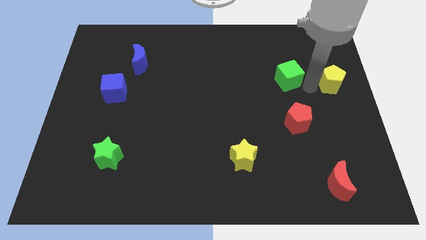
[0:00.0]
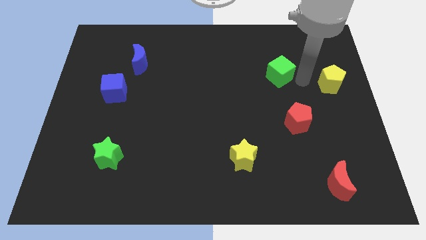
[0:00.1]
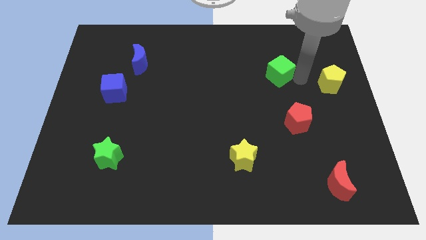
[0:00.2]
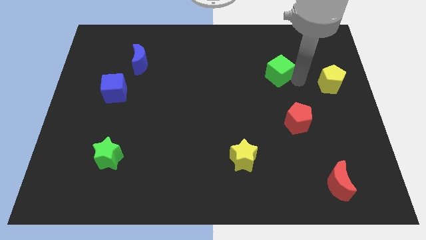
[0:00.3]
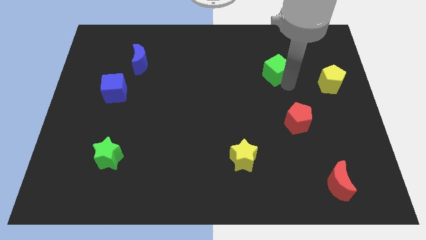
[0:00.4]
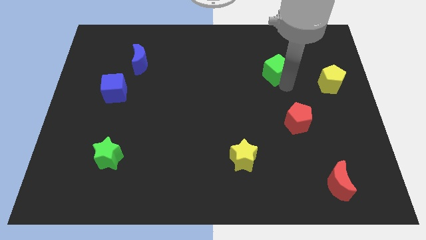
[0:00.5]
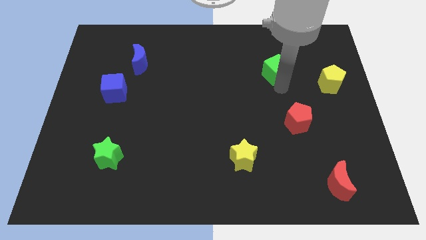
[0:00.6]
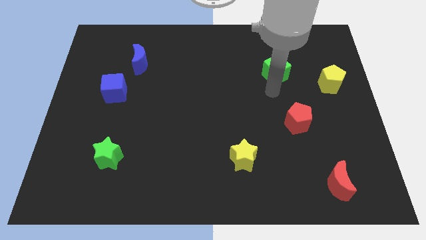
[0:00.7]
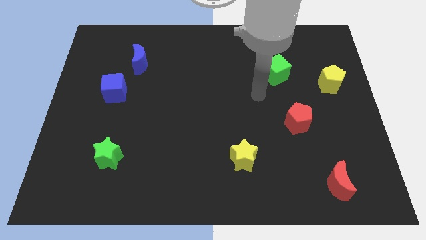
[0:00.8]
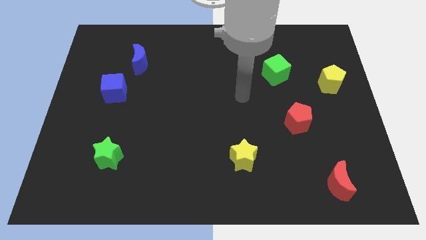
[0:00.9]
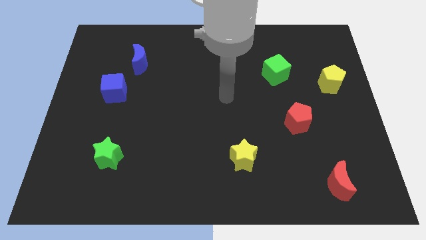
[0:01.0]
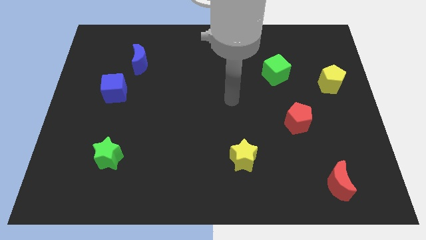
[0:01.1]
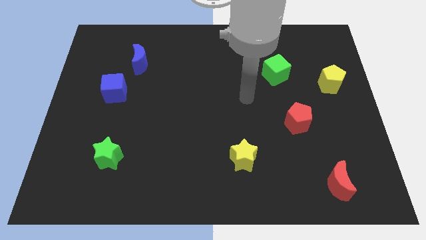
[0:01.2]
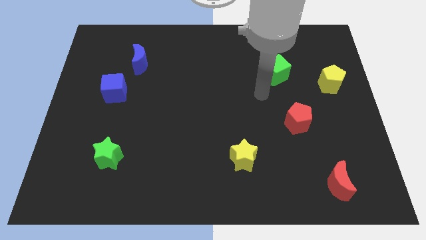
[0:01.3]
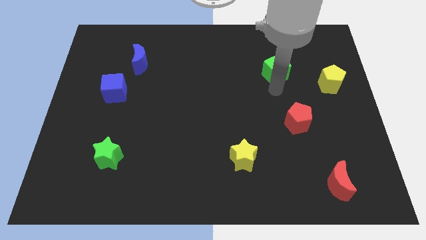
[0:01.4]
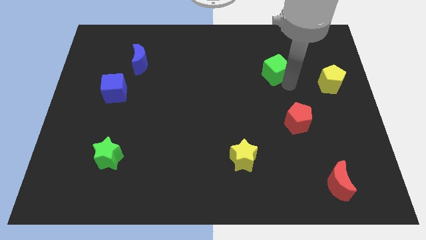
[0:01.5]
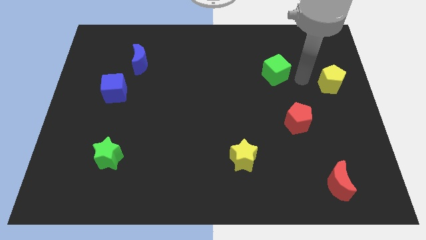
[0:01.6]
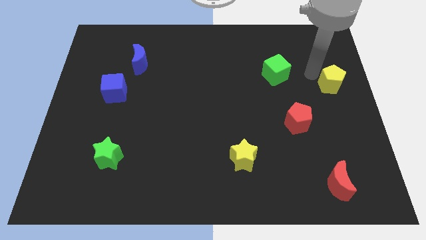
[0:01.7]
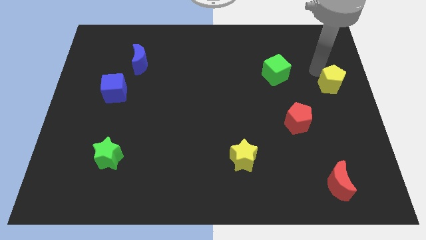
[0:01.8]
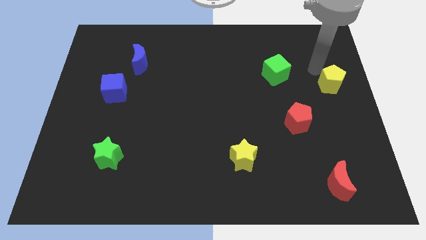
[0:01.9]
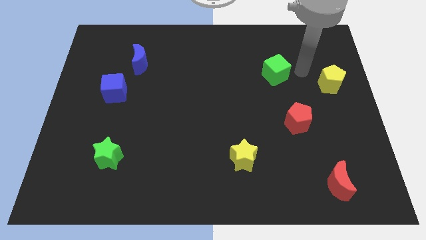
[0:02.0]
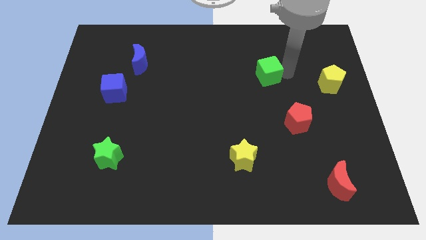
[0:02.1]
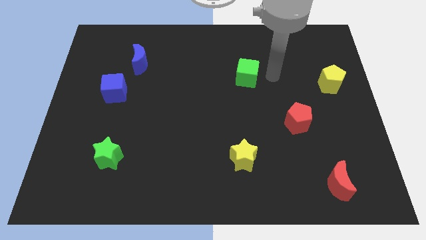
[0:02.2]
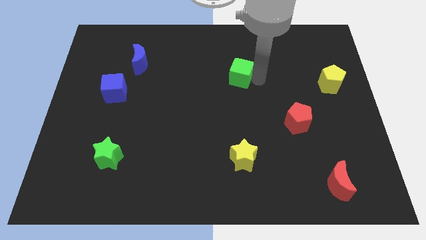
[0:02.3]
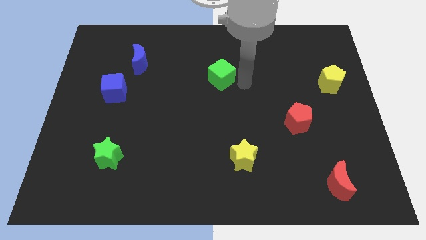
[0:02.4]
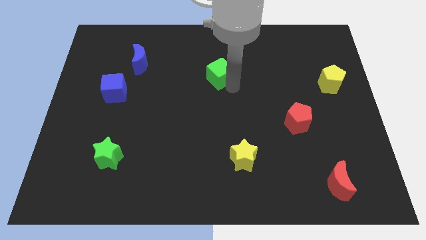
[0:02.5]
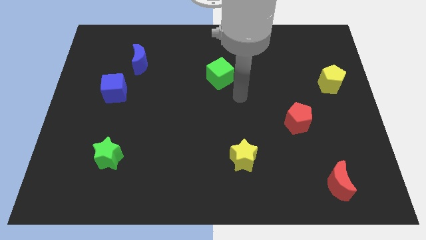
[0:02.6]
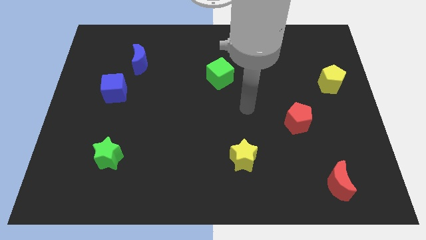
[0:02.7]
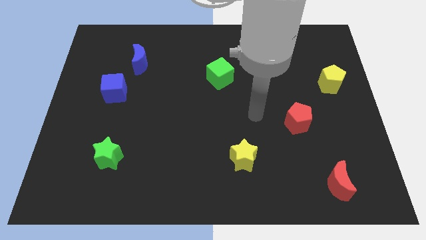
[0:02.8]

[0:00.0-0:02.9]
put the green cube diagonal to the green star

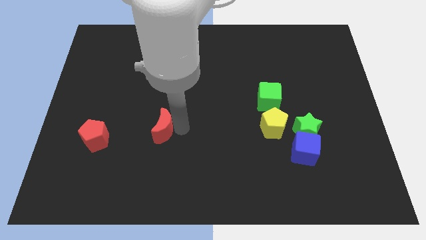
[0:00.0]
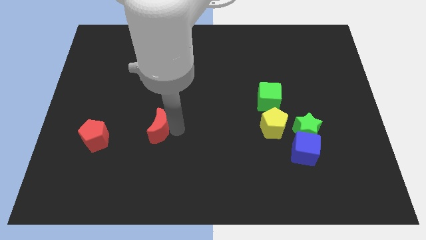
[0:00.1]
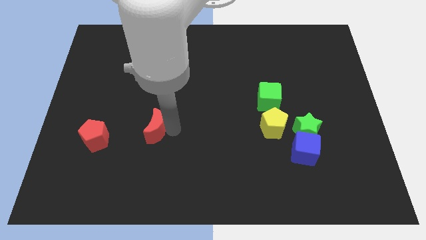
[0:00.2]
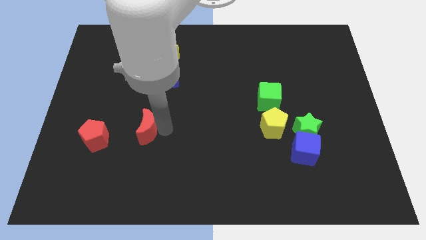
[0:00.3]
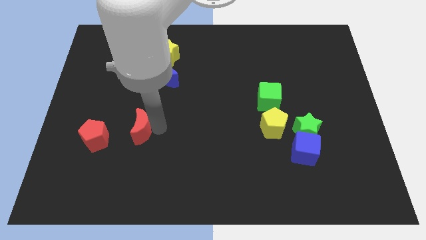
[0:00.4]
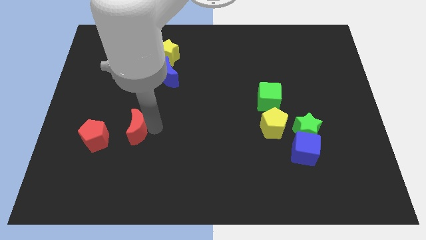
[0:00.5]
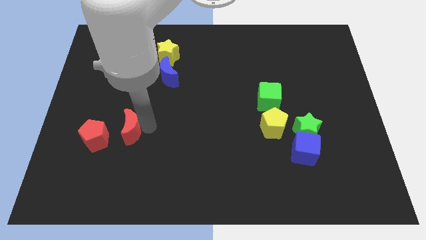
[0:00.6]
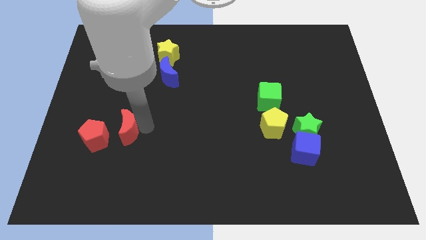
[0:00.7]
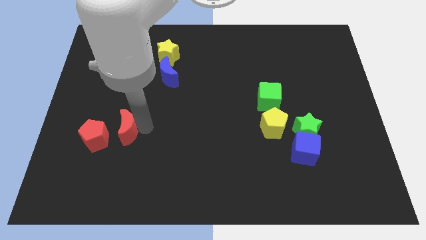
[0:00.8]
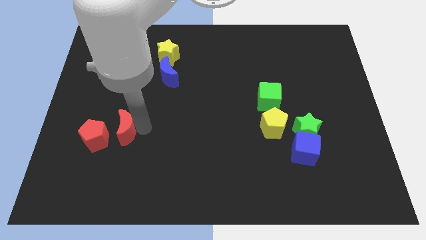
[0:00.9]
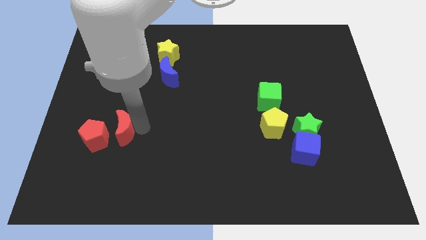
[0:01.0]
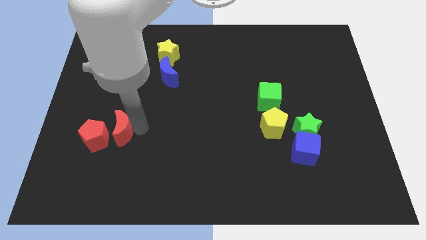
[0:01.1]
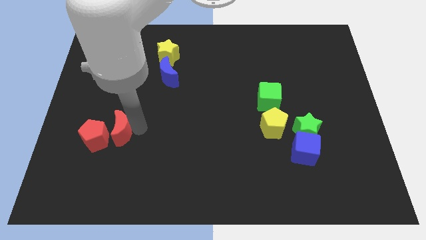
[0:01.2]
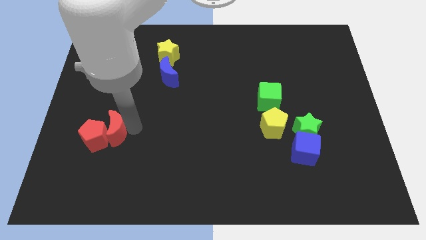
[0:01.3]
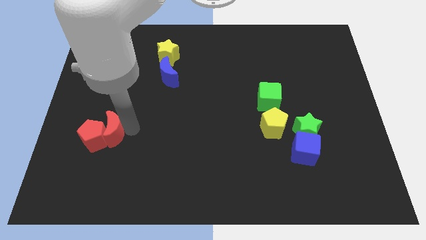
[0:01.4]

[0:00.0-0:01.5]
push the red crescent into the red pentagon

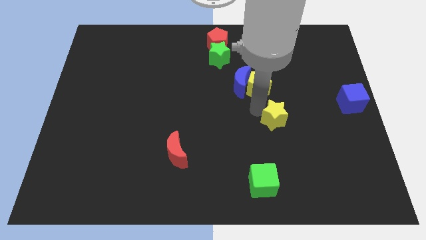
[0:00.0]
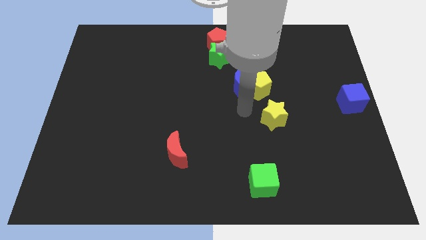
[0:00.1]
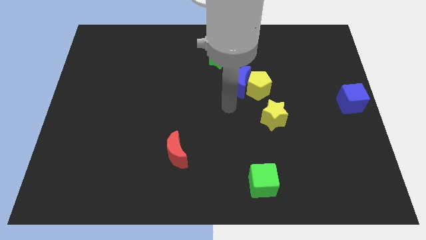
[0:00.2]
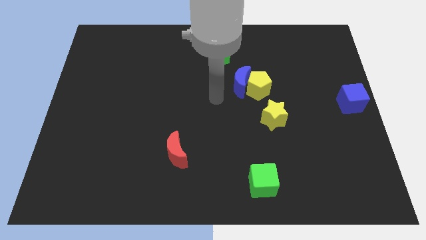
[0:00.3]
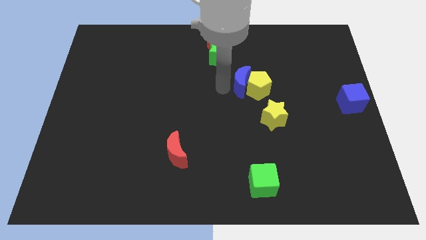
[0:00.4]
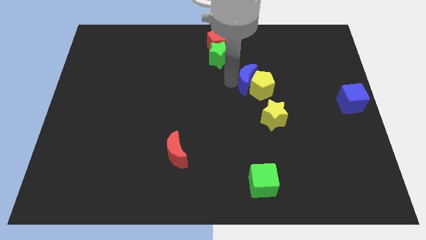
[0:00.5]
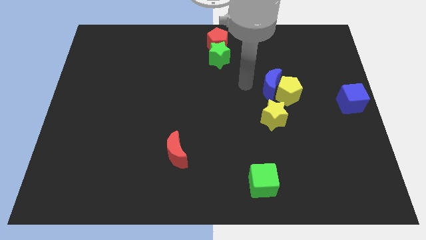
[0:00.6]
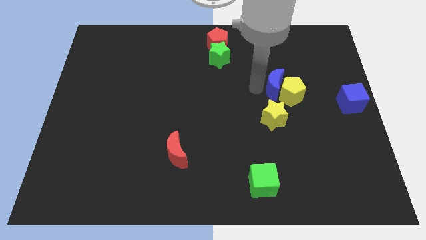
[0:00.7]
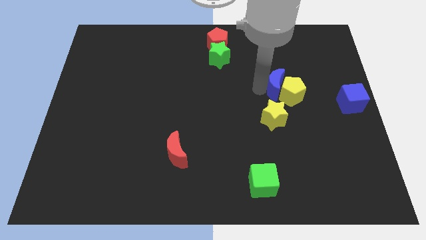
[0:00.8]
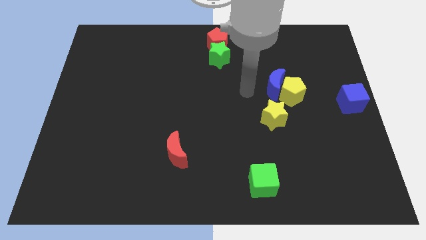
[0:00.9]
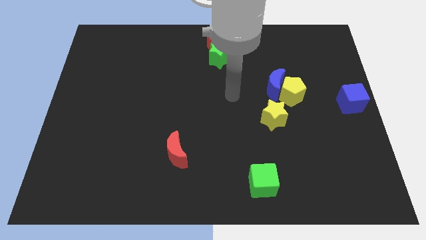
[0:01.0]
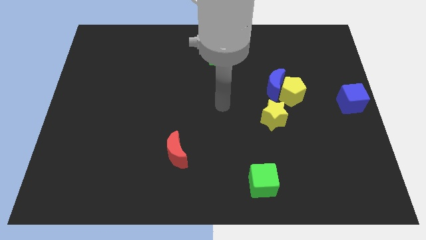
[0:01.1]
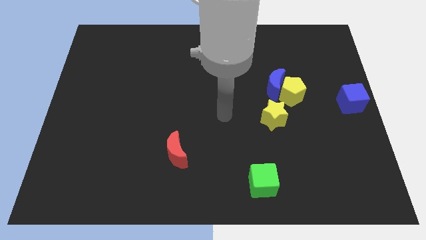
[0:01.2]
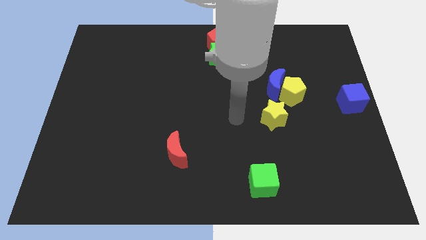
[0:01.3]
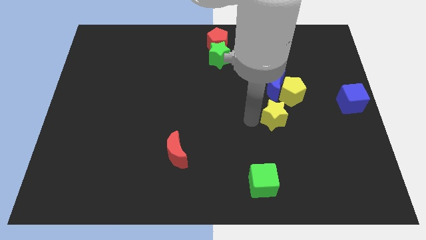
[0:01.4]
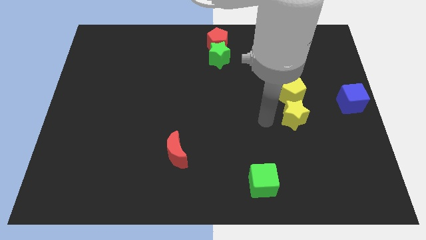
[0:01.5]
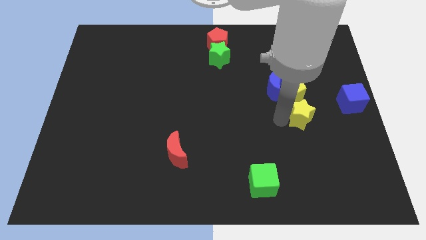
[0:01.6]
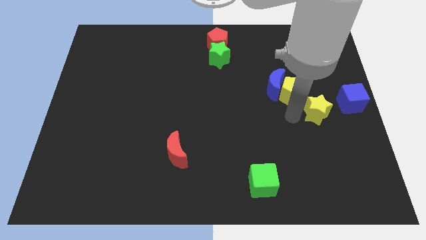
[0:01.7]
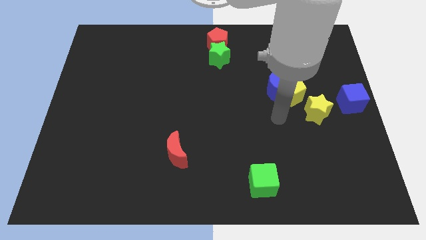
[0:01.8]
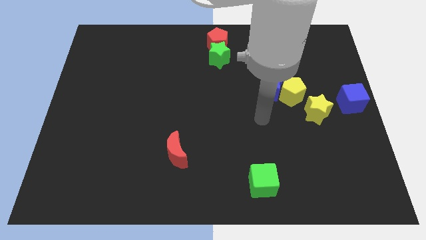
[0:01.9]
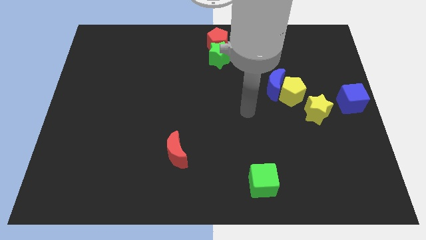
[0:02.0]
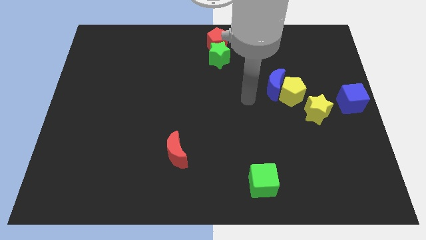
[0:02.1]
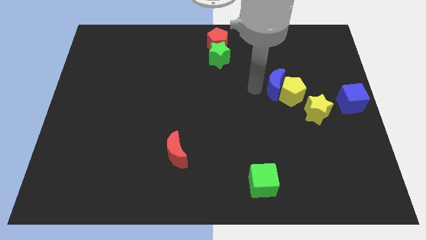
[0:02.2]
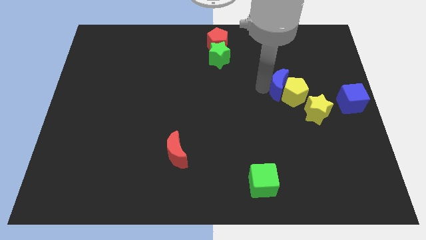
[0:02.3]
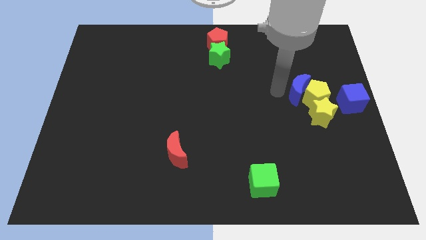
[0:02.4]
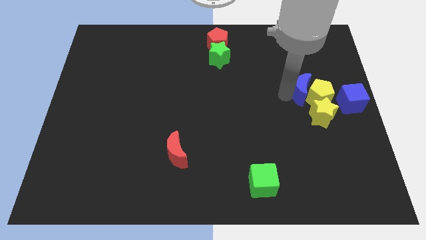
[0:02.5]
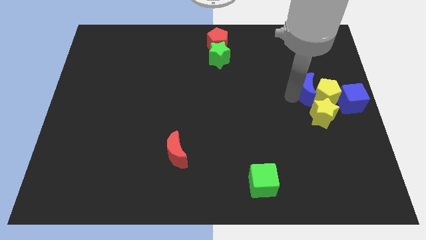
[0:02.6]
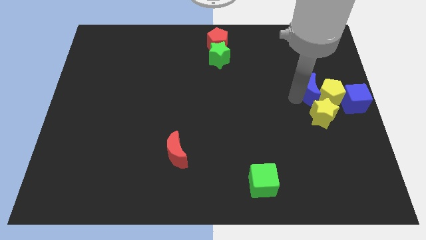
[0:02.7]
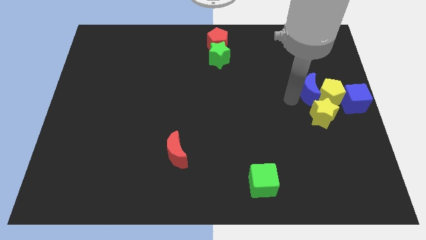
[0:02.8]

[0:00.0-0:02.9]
move yellow pentagon and star towards blue cube

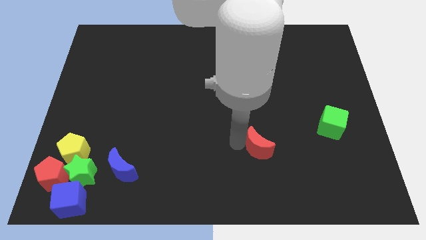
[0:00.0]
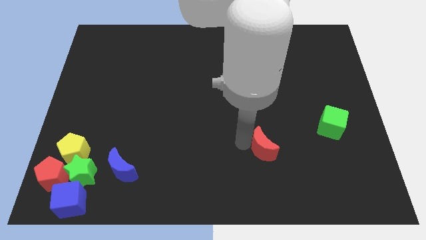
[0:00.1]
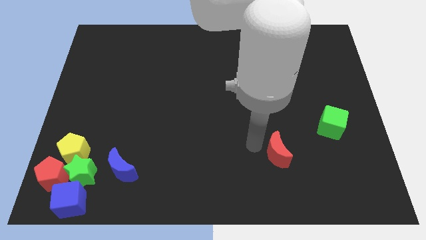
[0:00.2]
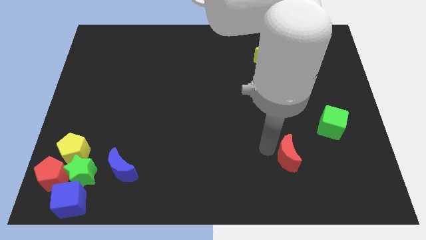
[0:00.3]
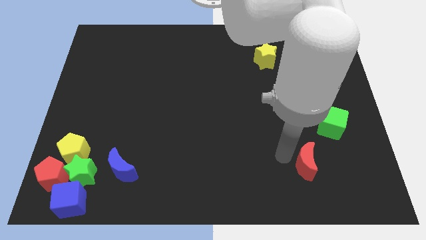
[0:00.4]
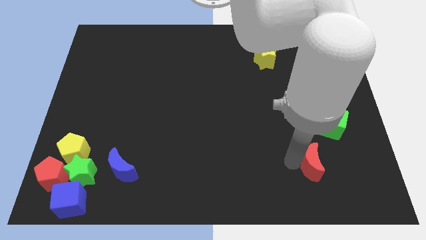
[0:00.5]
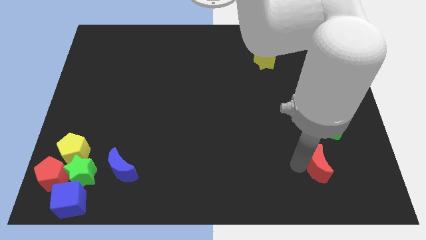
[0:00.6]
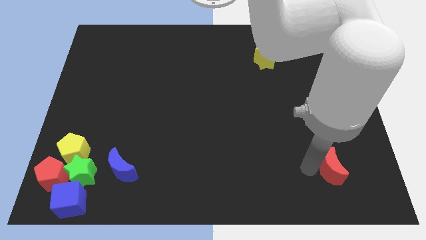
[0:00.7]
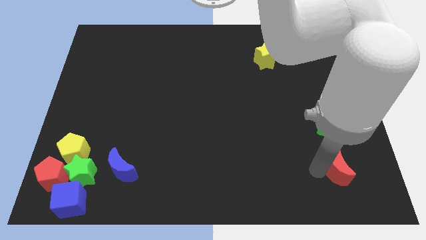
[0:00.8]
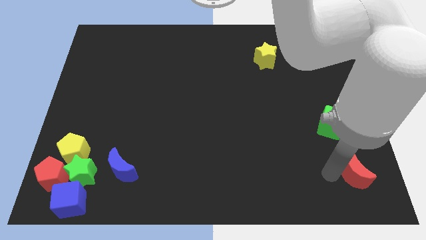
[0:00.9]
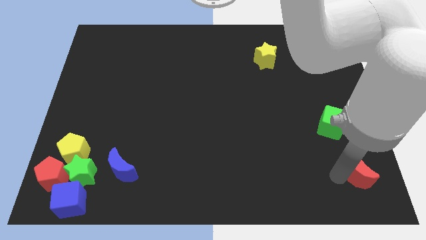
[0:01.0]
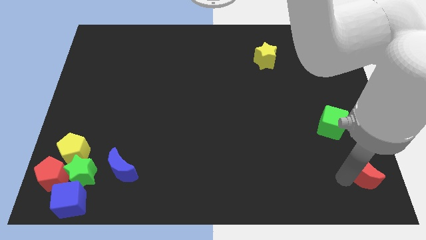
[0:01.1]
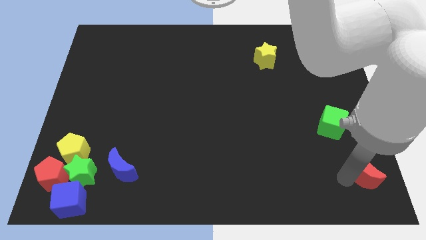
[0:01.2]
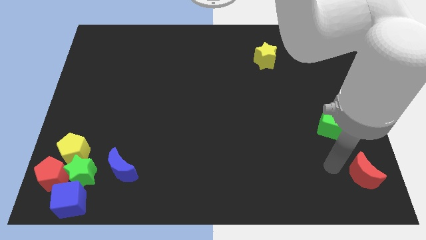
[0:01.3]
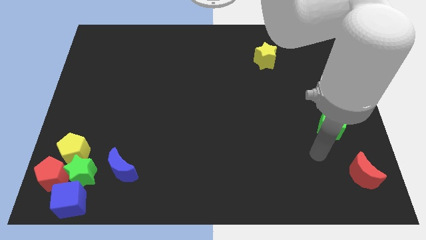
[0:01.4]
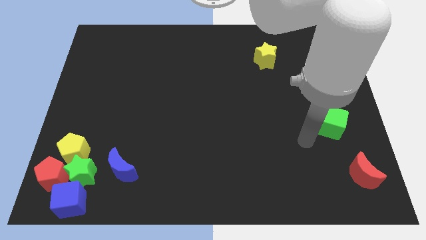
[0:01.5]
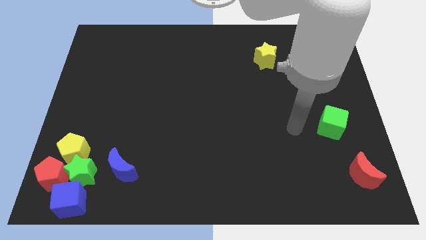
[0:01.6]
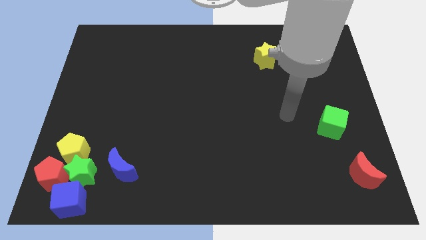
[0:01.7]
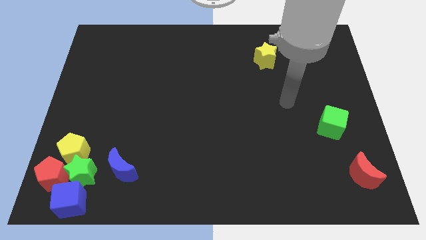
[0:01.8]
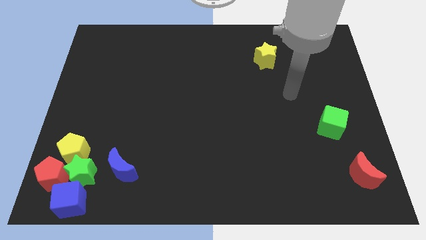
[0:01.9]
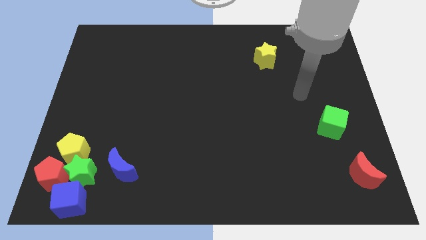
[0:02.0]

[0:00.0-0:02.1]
move red moon towards bottom right
